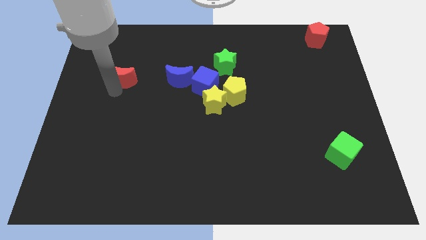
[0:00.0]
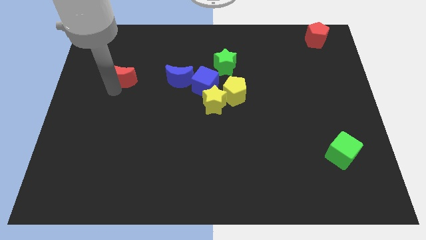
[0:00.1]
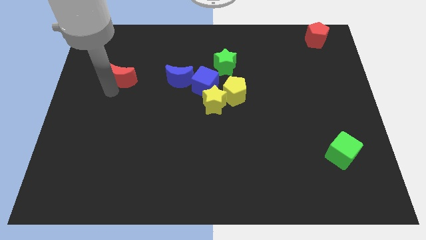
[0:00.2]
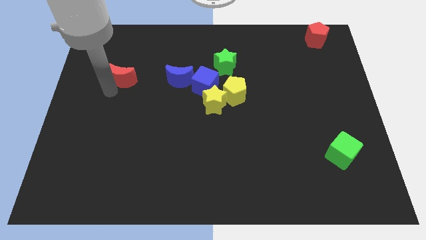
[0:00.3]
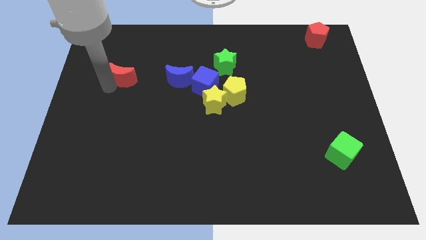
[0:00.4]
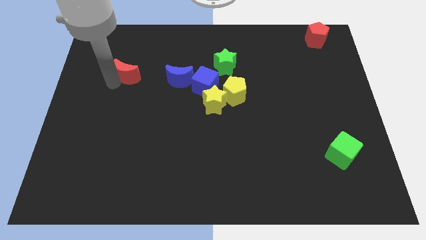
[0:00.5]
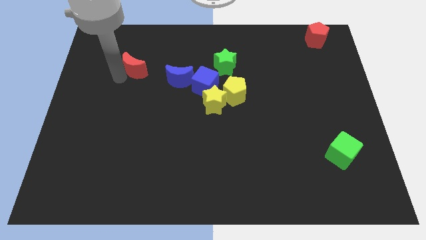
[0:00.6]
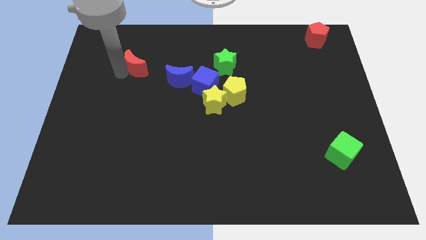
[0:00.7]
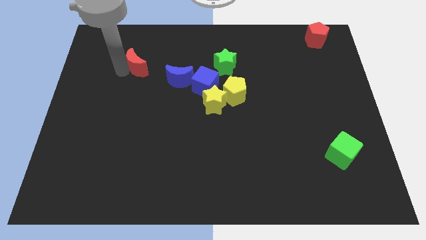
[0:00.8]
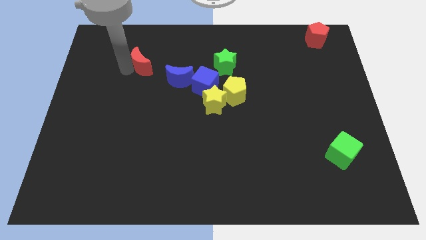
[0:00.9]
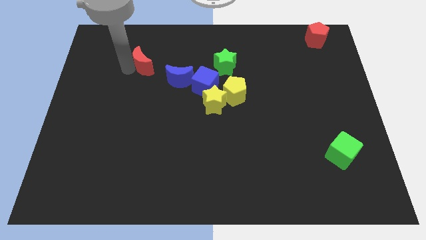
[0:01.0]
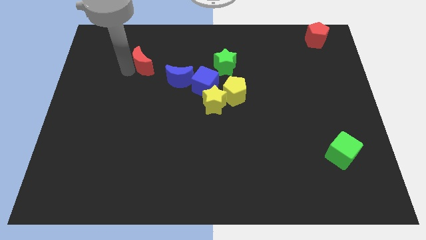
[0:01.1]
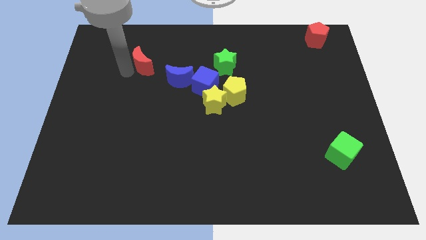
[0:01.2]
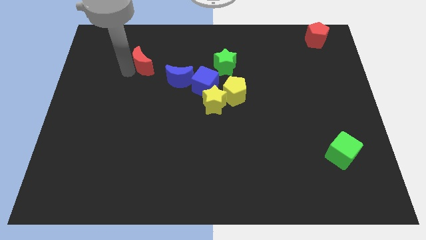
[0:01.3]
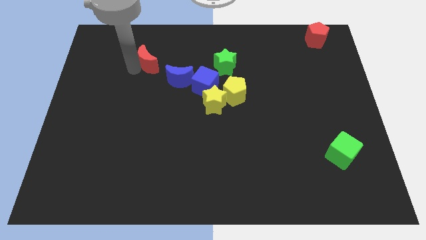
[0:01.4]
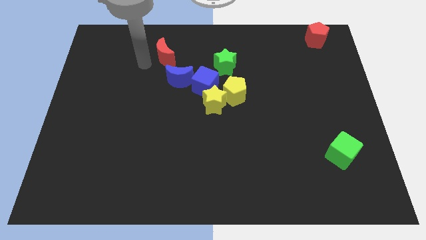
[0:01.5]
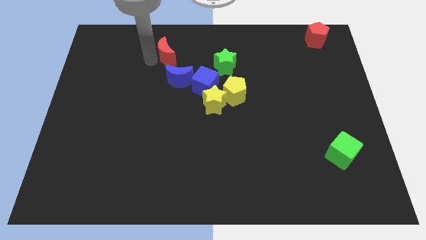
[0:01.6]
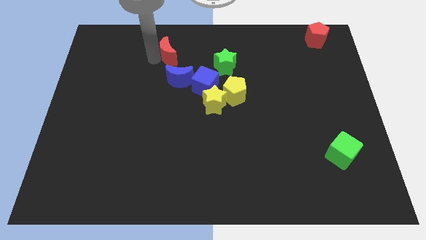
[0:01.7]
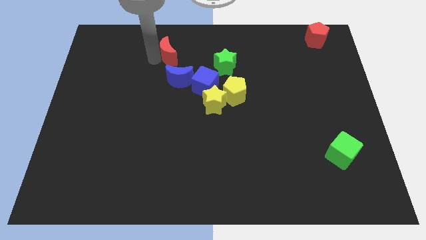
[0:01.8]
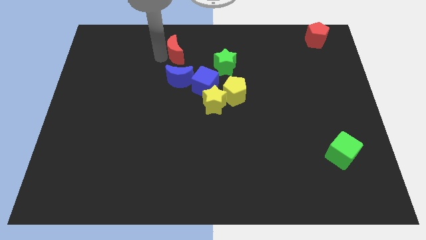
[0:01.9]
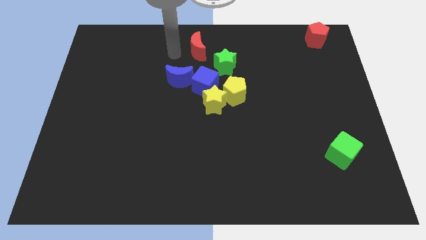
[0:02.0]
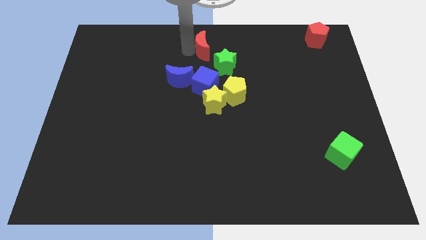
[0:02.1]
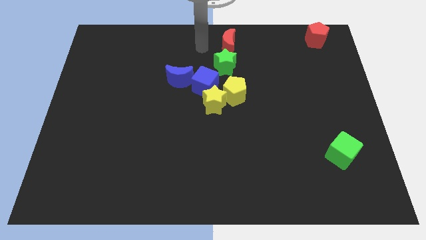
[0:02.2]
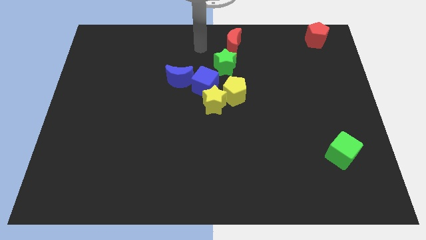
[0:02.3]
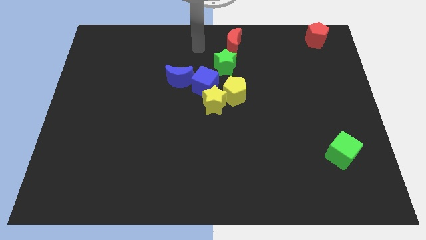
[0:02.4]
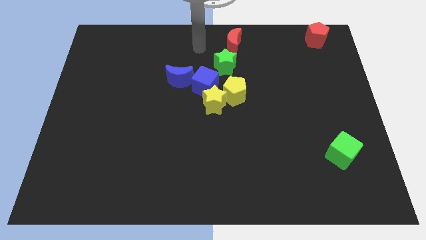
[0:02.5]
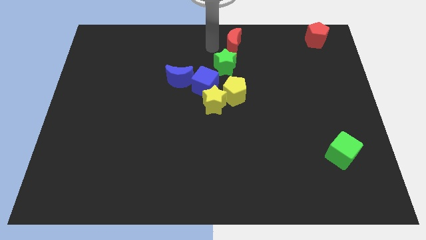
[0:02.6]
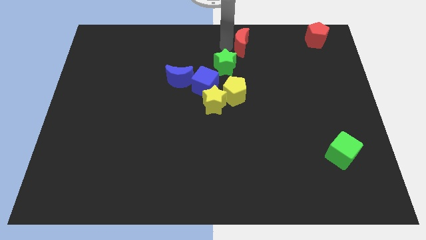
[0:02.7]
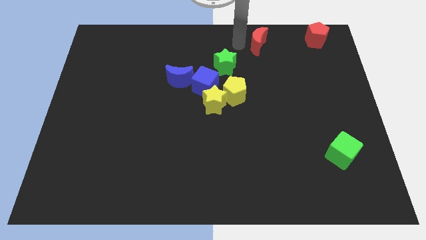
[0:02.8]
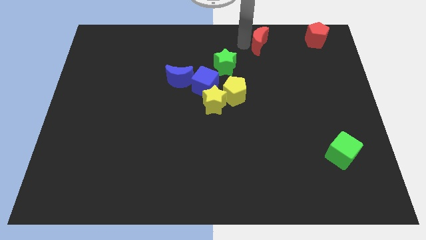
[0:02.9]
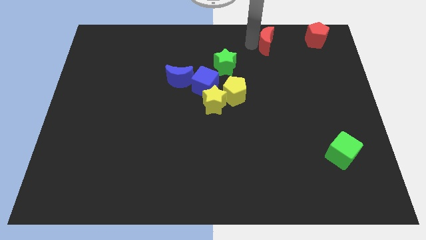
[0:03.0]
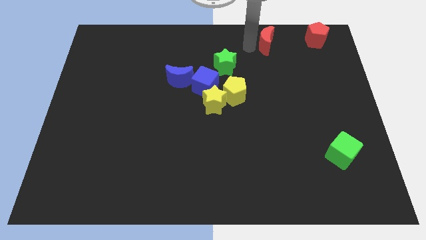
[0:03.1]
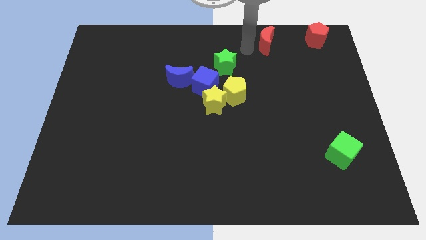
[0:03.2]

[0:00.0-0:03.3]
push red moon towards red pentagon

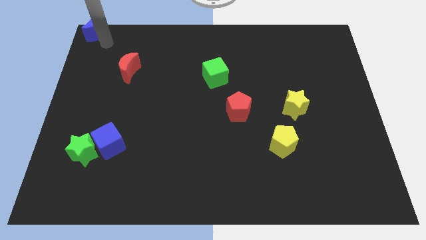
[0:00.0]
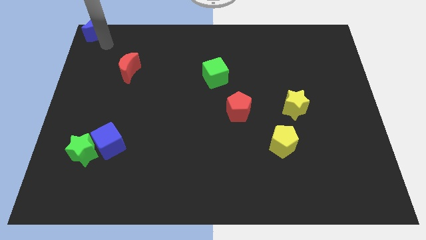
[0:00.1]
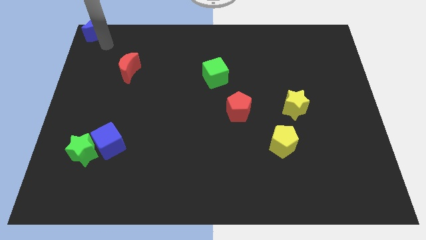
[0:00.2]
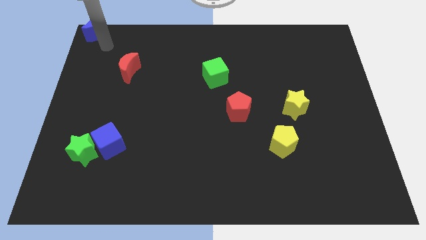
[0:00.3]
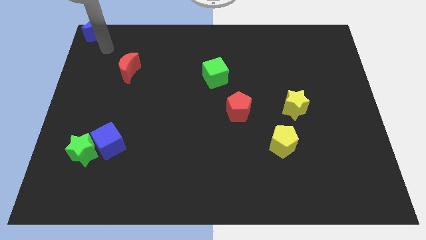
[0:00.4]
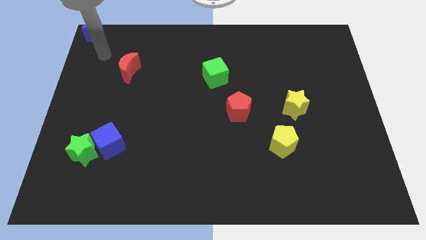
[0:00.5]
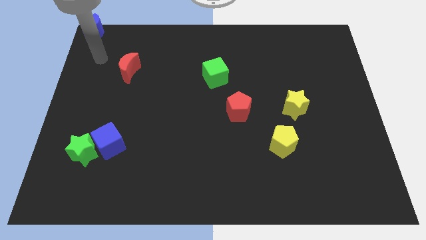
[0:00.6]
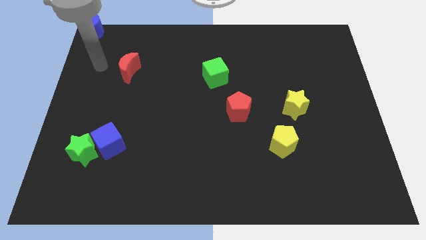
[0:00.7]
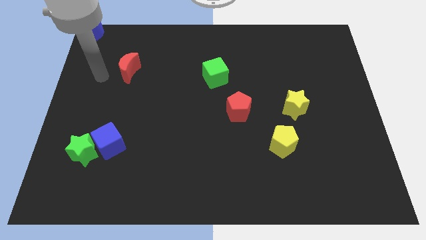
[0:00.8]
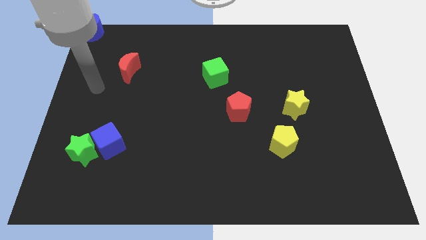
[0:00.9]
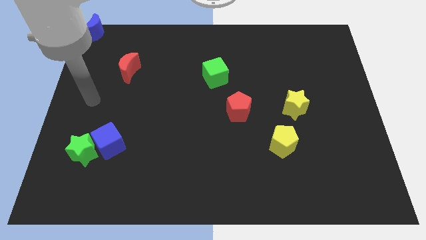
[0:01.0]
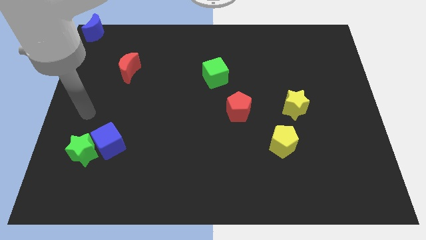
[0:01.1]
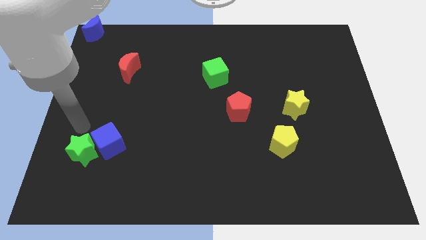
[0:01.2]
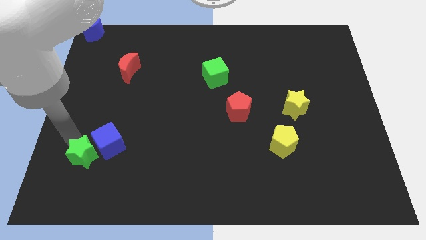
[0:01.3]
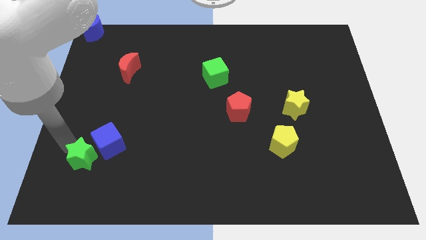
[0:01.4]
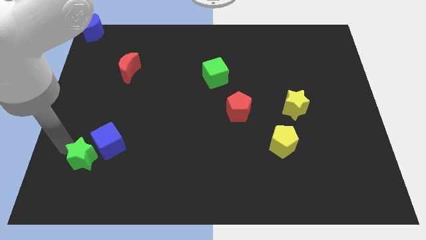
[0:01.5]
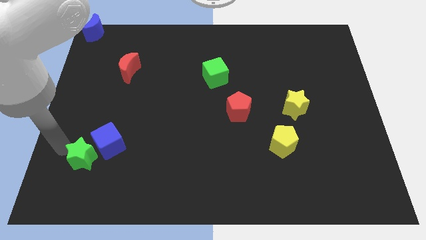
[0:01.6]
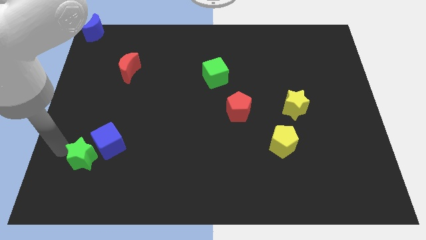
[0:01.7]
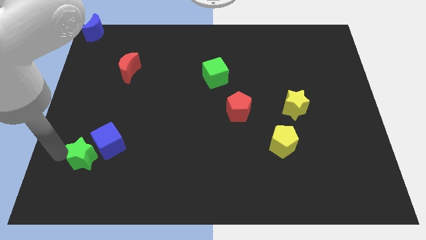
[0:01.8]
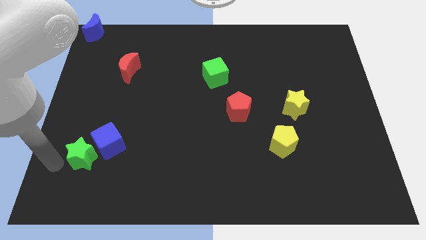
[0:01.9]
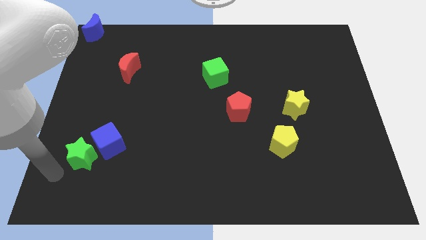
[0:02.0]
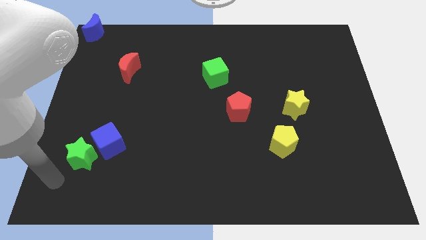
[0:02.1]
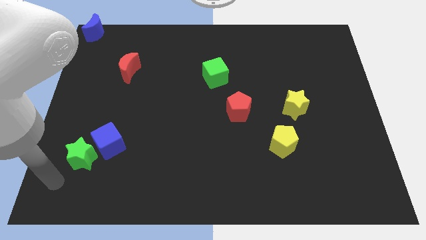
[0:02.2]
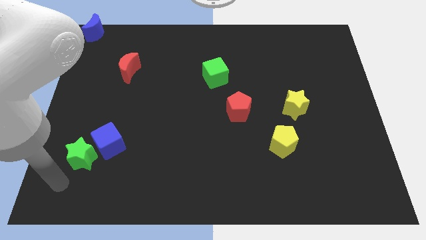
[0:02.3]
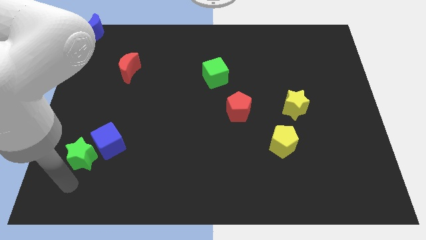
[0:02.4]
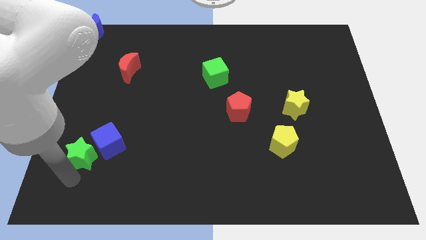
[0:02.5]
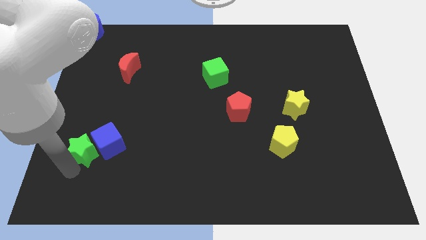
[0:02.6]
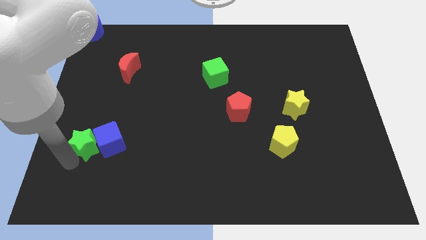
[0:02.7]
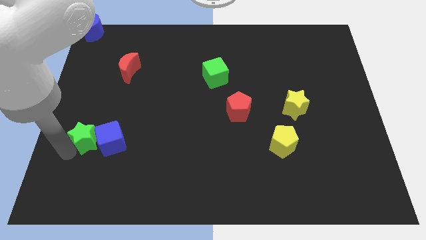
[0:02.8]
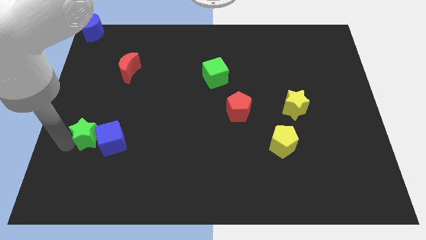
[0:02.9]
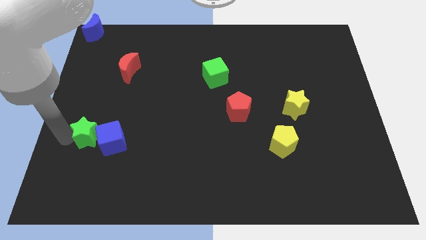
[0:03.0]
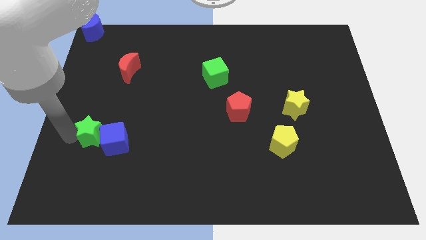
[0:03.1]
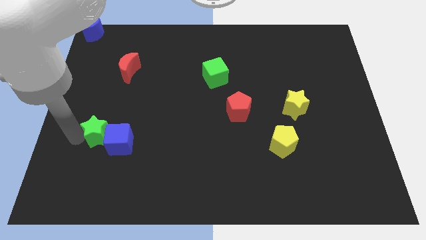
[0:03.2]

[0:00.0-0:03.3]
slide the green star to the left side of the blue cube

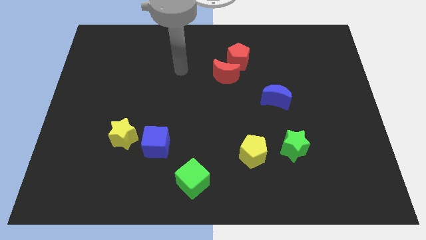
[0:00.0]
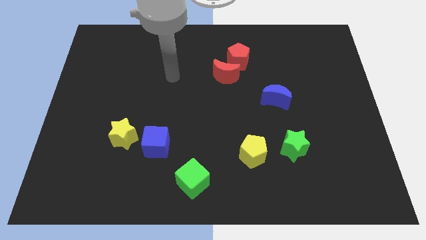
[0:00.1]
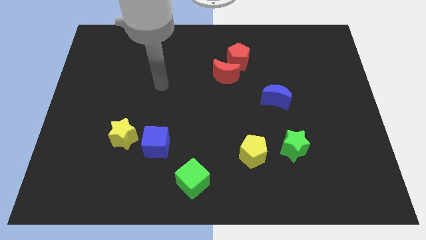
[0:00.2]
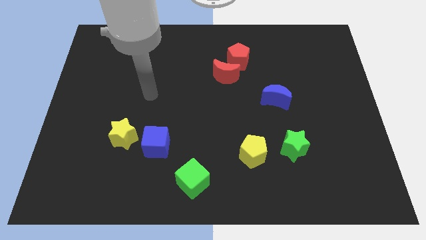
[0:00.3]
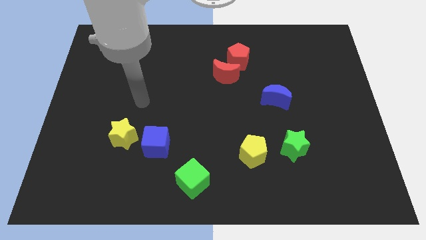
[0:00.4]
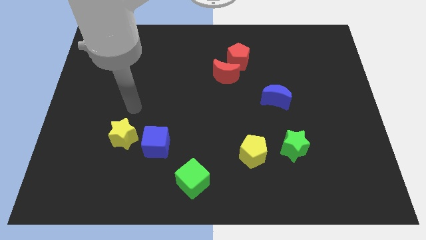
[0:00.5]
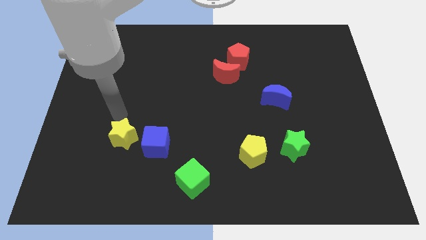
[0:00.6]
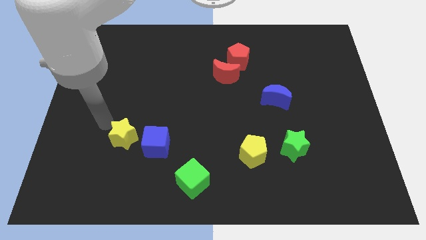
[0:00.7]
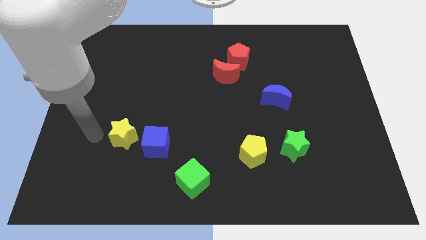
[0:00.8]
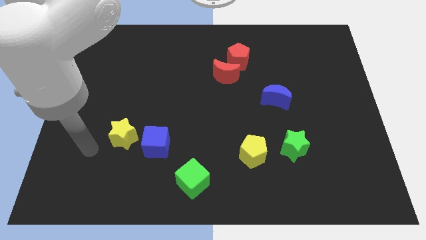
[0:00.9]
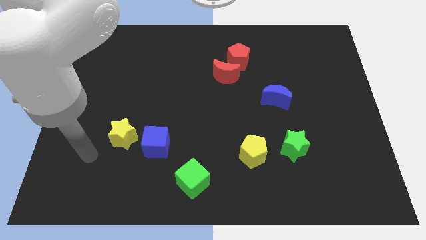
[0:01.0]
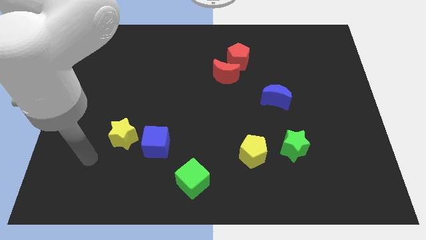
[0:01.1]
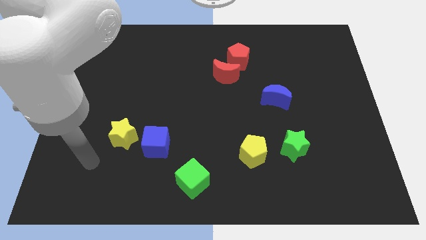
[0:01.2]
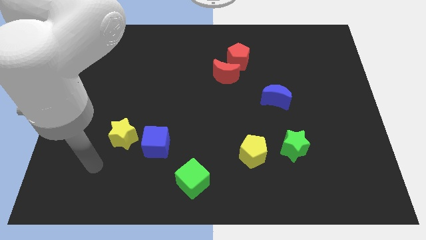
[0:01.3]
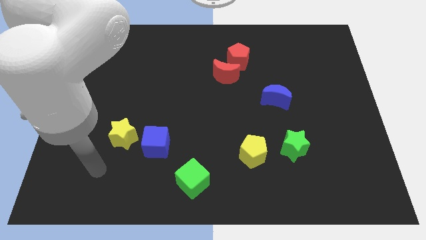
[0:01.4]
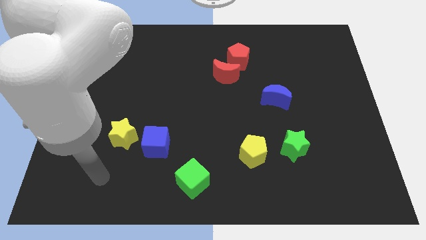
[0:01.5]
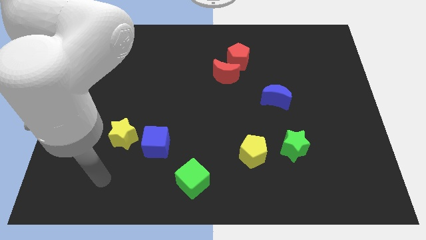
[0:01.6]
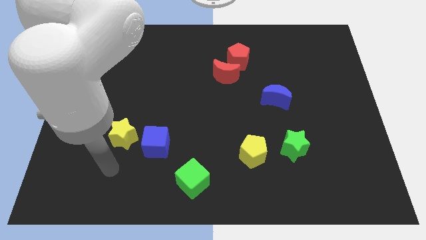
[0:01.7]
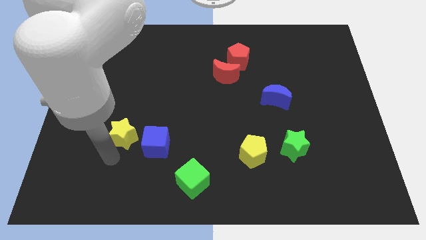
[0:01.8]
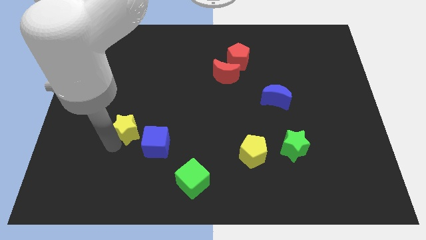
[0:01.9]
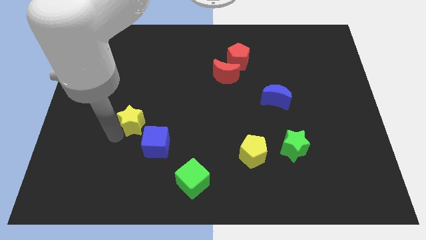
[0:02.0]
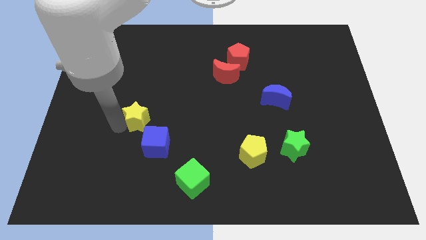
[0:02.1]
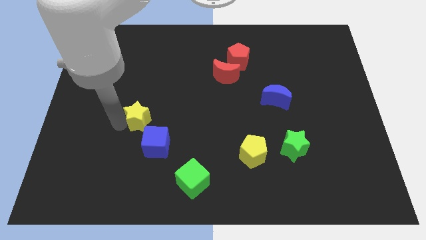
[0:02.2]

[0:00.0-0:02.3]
move the yellow star to the top left of the blue cube

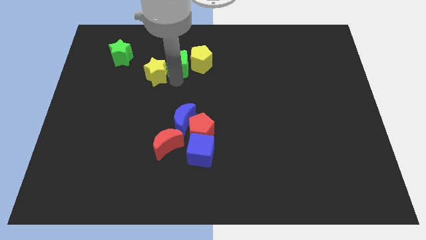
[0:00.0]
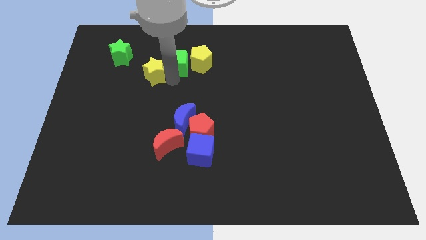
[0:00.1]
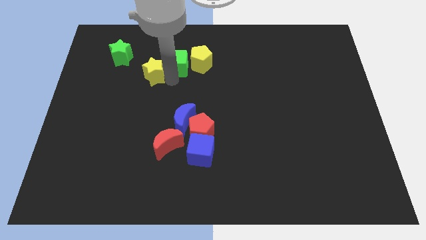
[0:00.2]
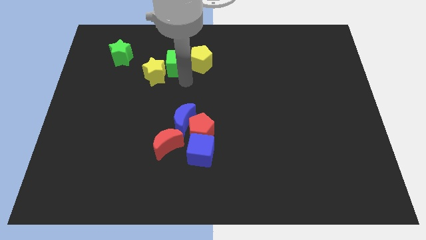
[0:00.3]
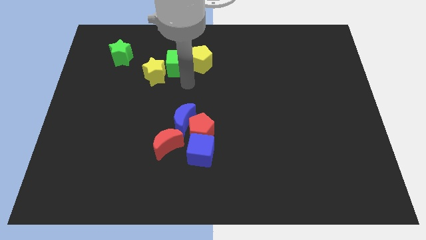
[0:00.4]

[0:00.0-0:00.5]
move the arm slightly away from the green cube
